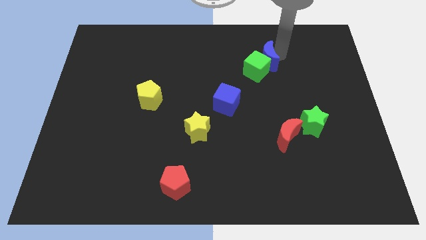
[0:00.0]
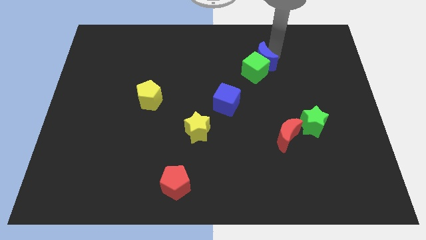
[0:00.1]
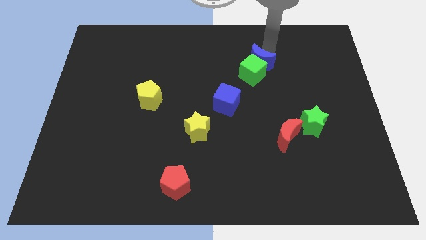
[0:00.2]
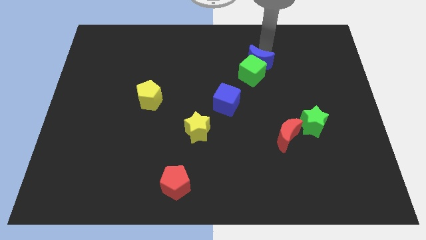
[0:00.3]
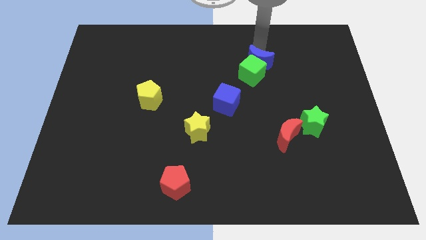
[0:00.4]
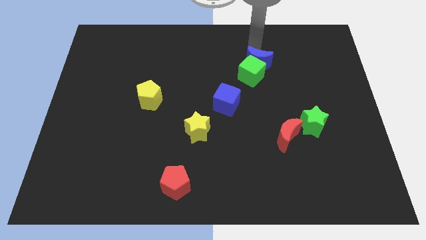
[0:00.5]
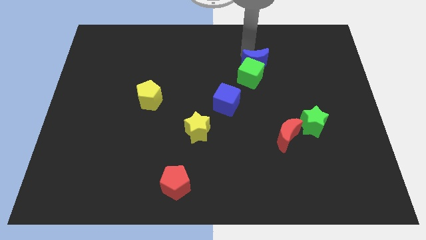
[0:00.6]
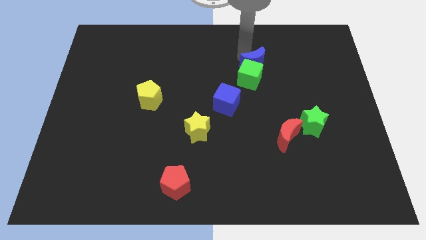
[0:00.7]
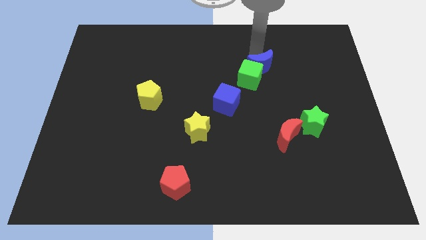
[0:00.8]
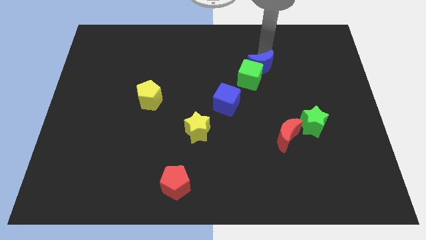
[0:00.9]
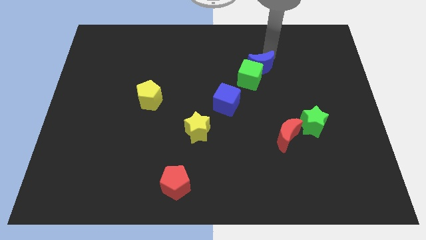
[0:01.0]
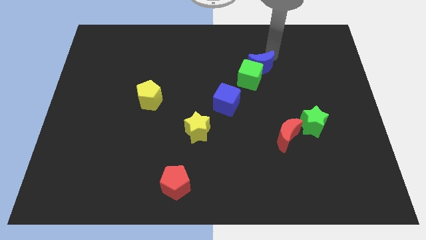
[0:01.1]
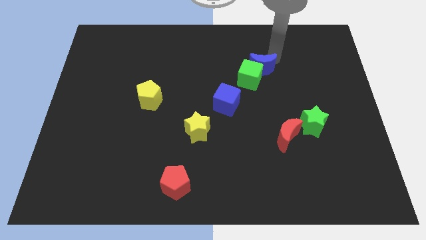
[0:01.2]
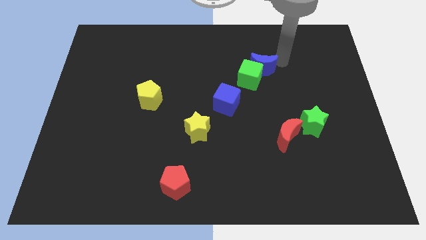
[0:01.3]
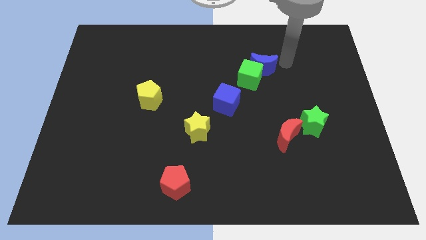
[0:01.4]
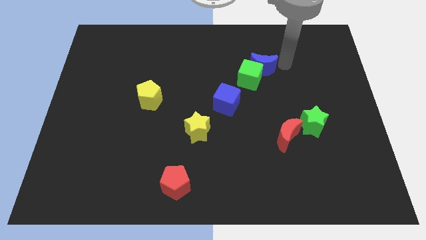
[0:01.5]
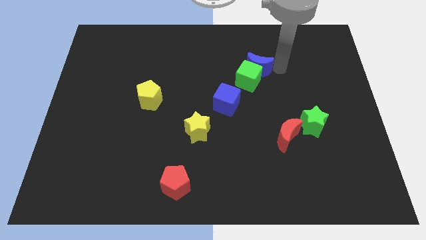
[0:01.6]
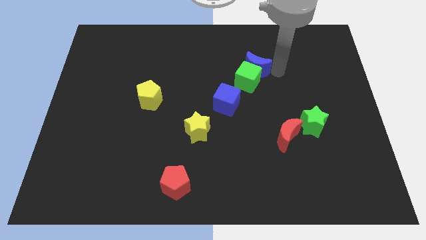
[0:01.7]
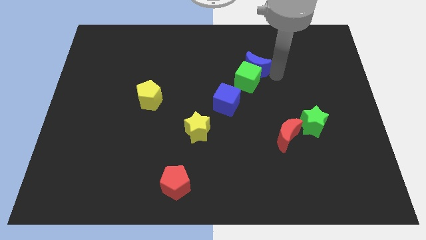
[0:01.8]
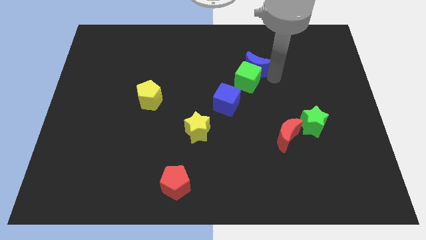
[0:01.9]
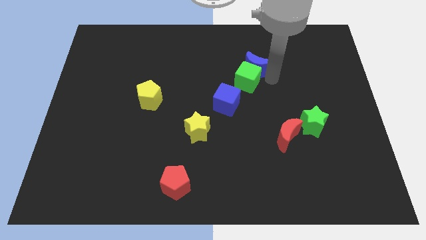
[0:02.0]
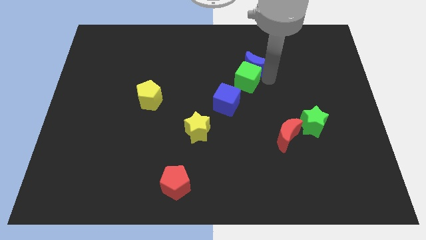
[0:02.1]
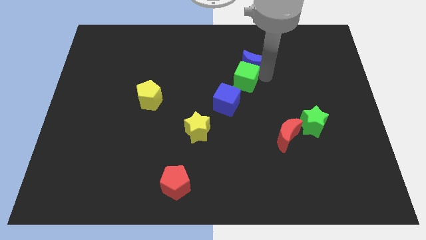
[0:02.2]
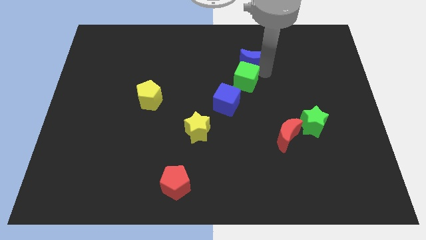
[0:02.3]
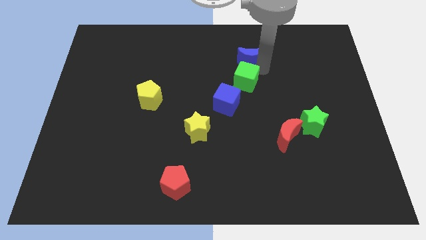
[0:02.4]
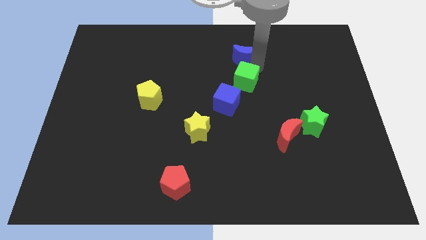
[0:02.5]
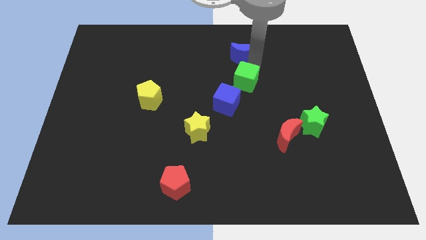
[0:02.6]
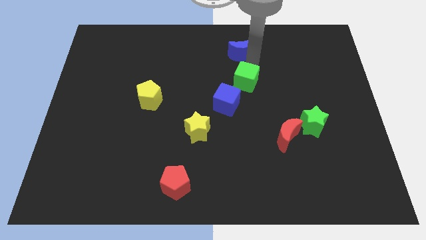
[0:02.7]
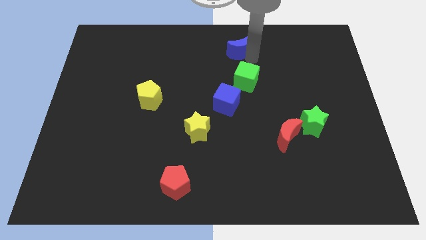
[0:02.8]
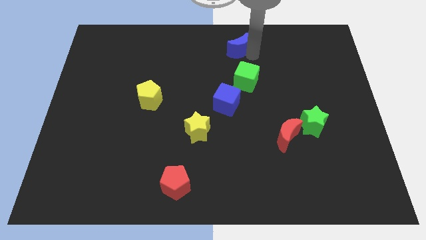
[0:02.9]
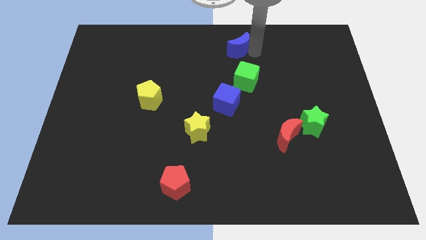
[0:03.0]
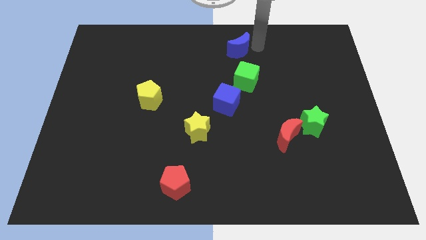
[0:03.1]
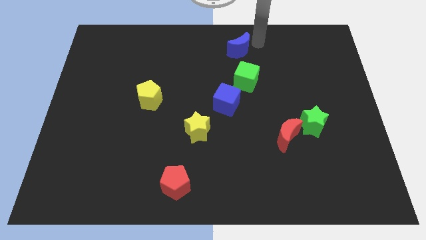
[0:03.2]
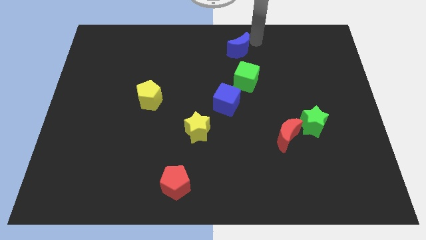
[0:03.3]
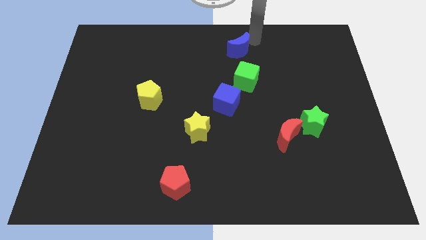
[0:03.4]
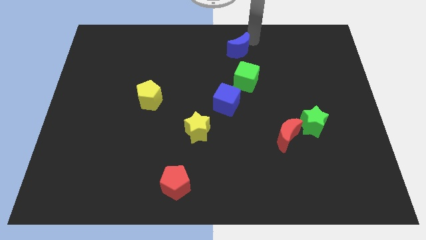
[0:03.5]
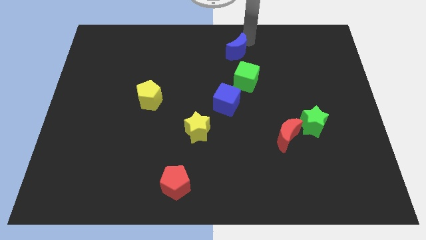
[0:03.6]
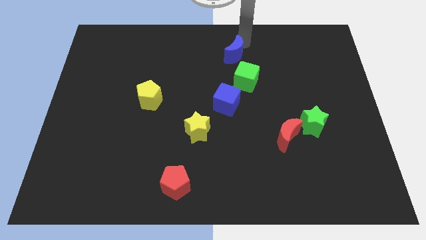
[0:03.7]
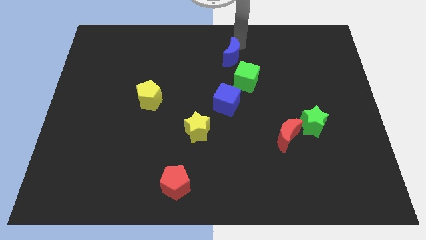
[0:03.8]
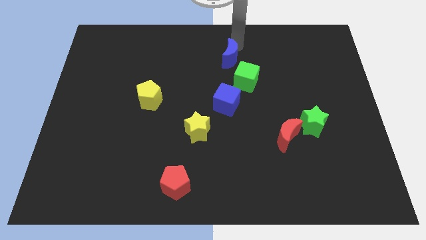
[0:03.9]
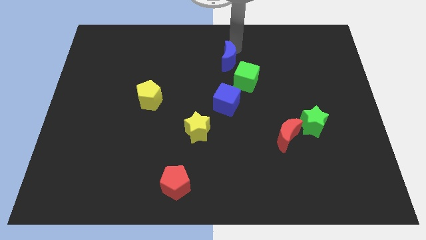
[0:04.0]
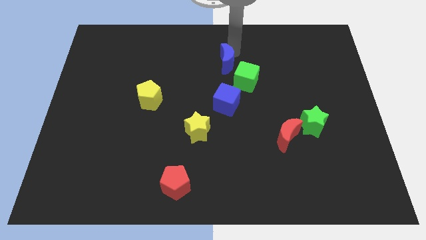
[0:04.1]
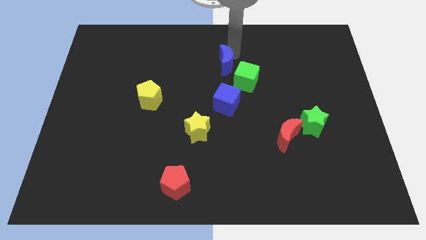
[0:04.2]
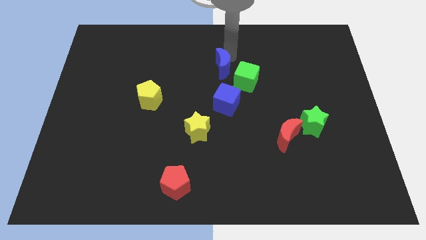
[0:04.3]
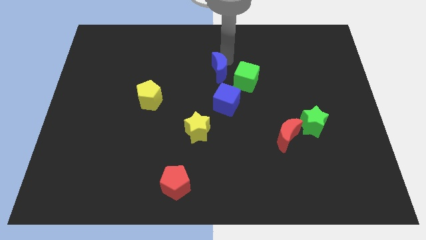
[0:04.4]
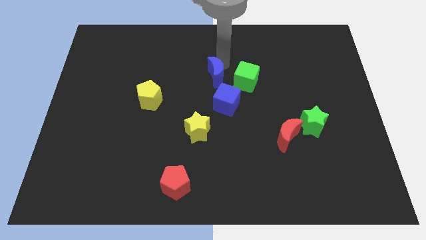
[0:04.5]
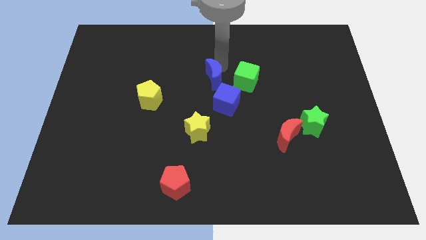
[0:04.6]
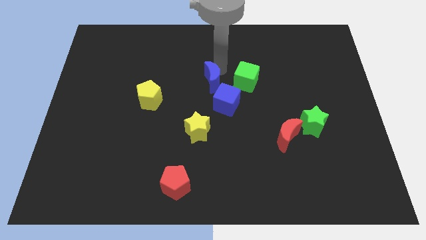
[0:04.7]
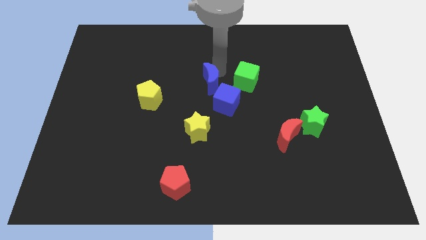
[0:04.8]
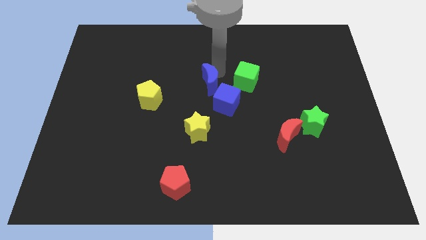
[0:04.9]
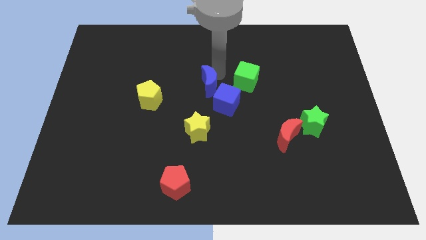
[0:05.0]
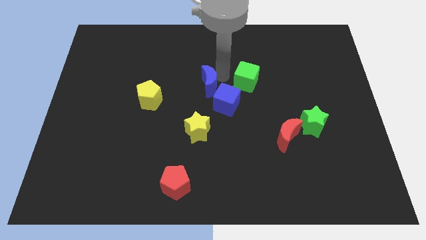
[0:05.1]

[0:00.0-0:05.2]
move the blue crescent to the center of the board

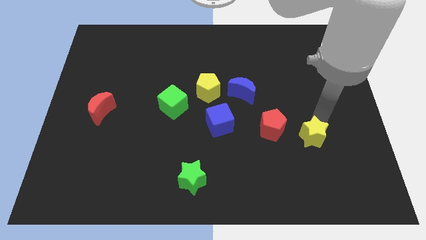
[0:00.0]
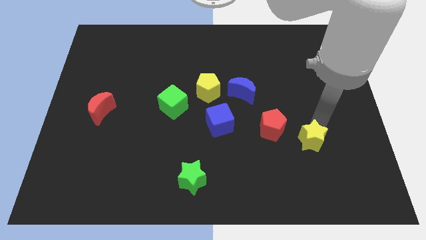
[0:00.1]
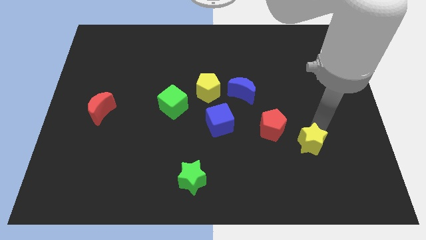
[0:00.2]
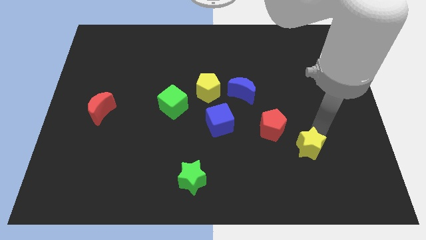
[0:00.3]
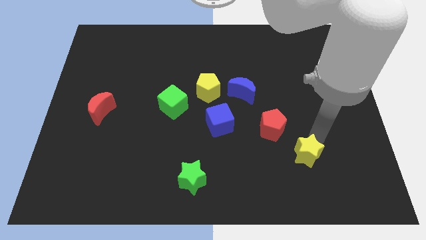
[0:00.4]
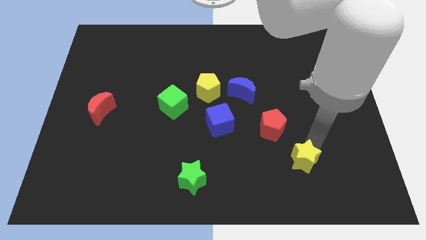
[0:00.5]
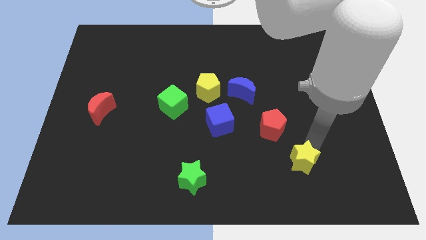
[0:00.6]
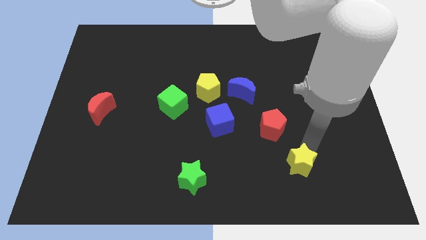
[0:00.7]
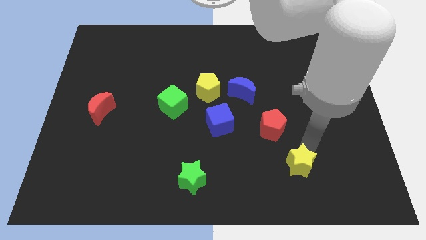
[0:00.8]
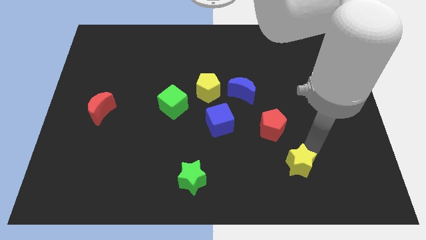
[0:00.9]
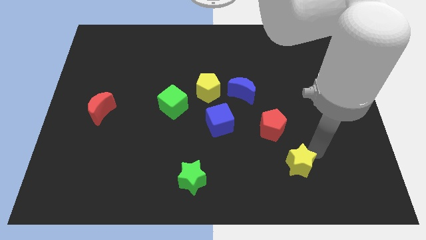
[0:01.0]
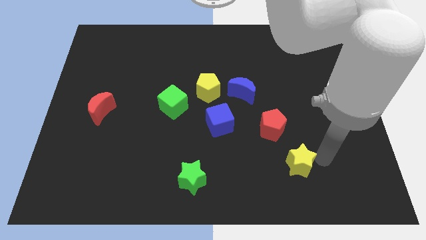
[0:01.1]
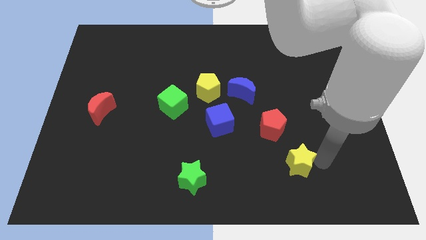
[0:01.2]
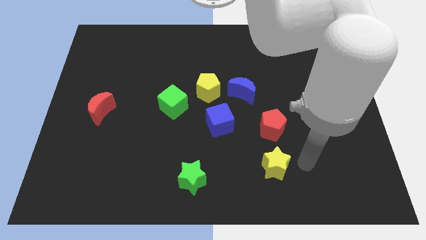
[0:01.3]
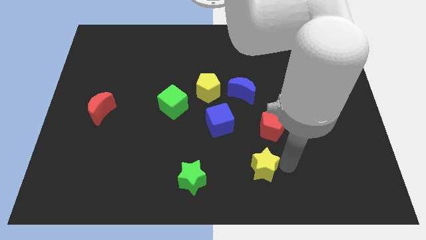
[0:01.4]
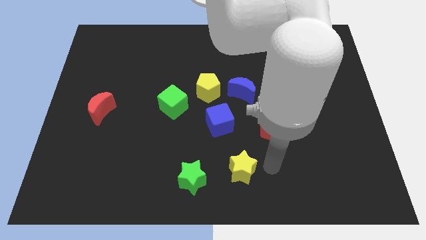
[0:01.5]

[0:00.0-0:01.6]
move the yellow star below the red pentagon

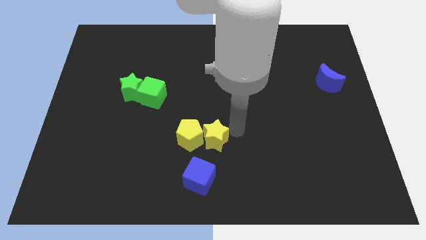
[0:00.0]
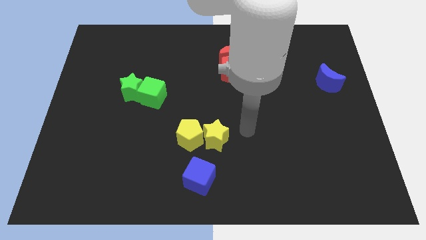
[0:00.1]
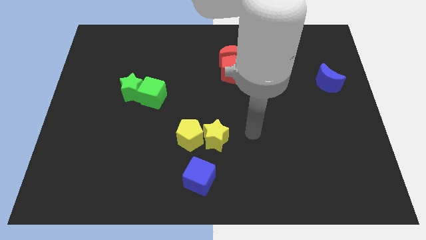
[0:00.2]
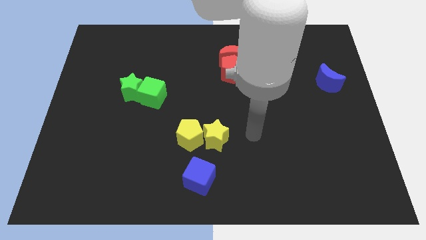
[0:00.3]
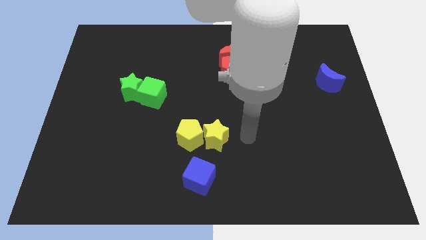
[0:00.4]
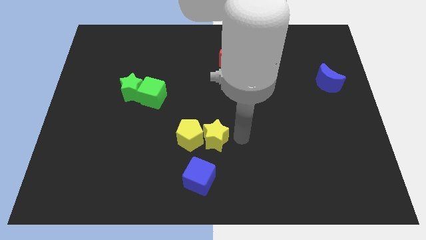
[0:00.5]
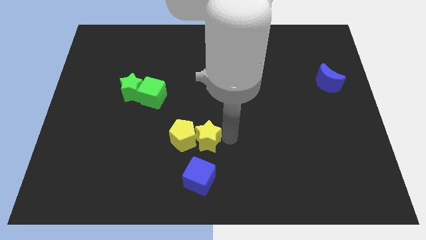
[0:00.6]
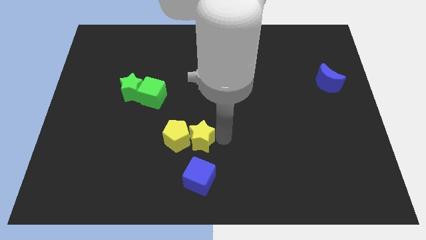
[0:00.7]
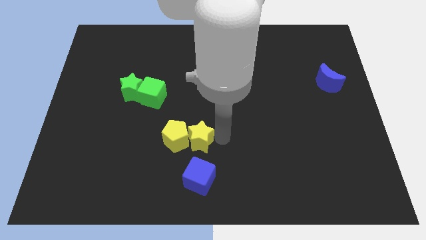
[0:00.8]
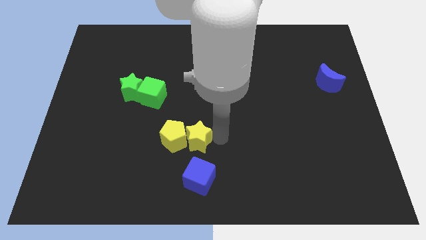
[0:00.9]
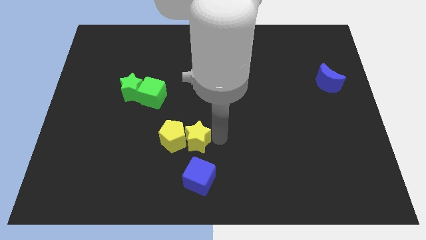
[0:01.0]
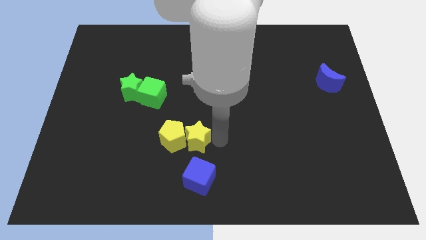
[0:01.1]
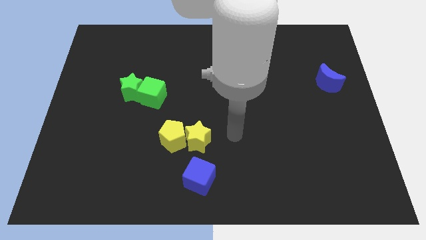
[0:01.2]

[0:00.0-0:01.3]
place the yellow blocks in between the green cube and blue cube

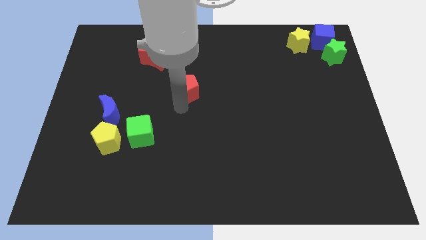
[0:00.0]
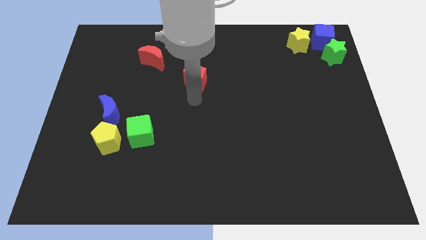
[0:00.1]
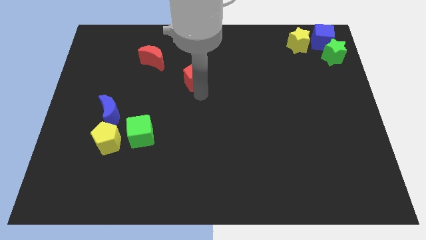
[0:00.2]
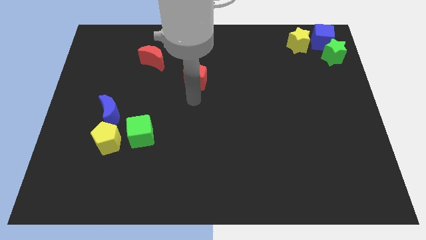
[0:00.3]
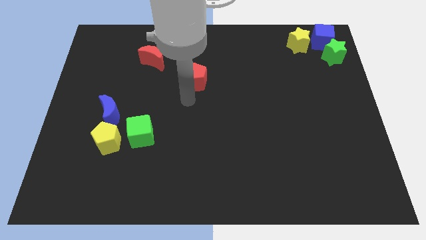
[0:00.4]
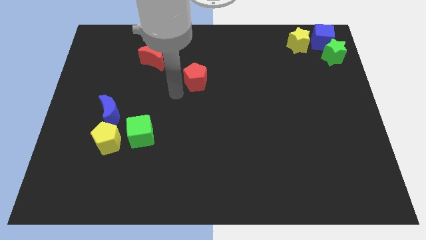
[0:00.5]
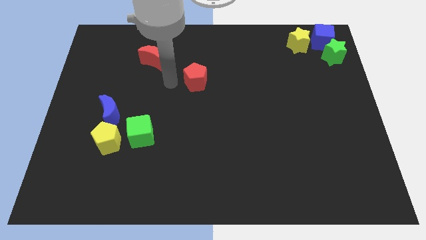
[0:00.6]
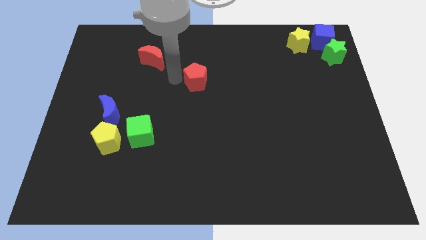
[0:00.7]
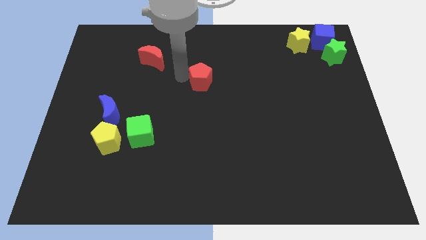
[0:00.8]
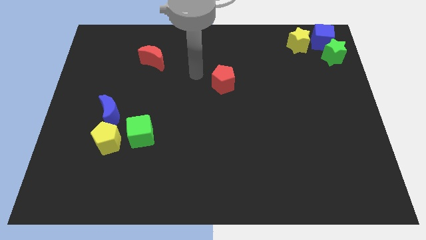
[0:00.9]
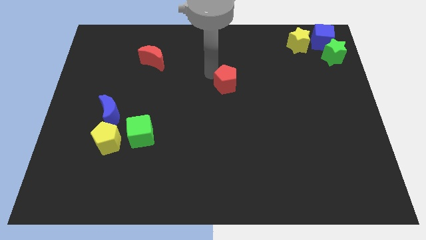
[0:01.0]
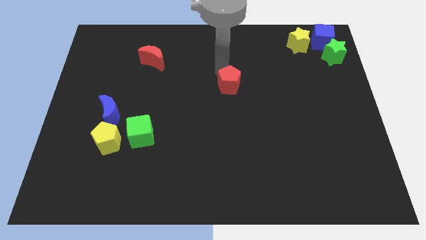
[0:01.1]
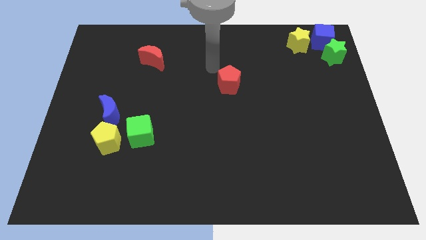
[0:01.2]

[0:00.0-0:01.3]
push the red pentagon slightly to the right
